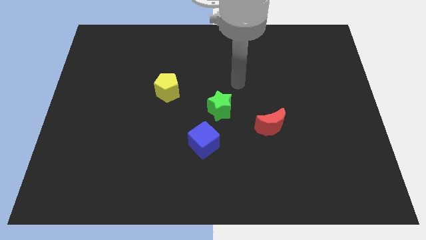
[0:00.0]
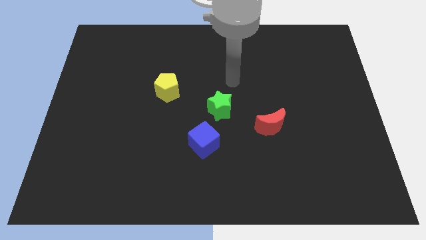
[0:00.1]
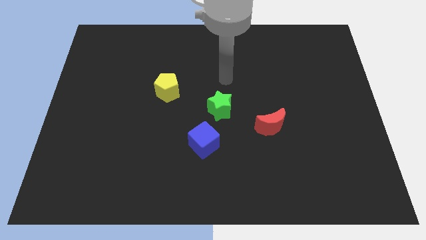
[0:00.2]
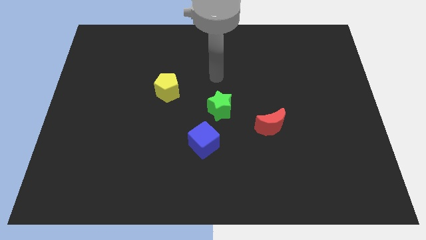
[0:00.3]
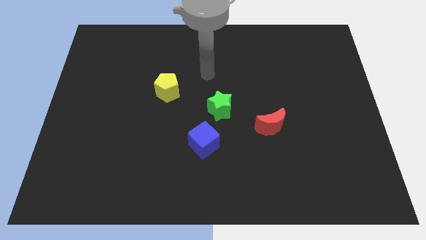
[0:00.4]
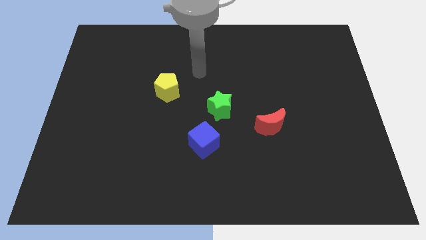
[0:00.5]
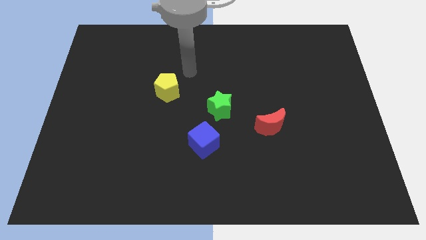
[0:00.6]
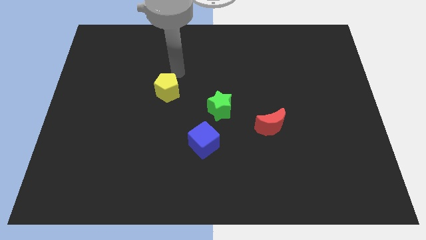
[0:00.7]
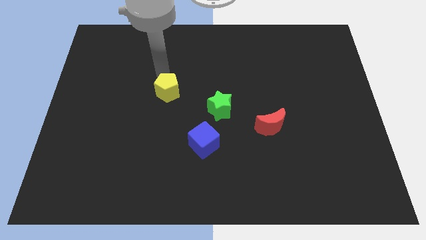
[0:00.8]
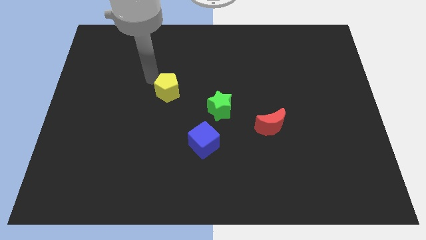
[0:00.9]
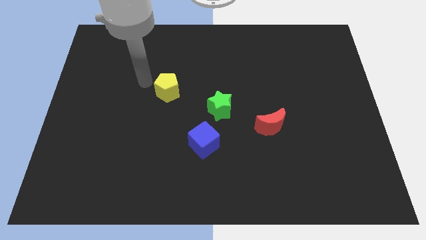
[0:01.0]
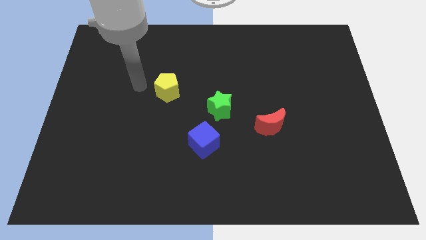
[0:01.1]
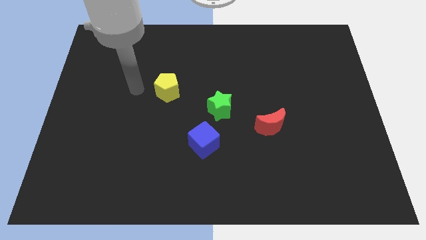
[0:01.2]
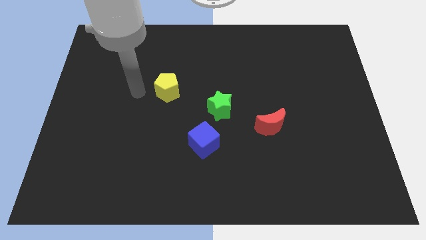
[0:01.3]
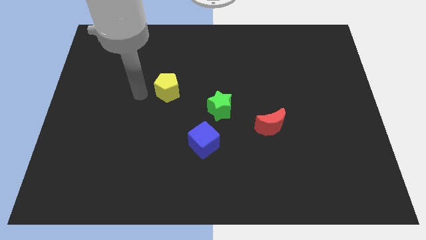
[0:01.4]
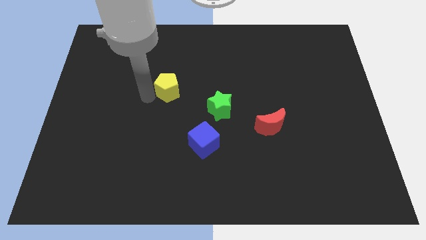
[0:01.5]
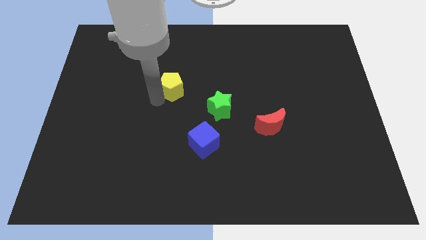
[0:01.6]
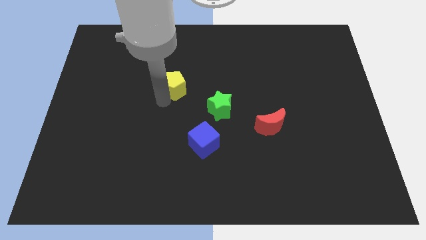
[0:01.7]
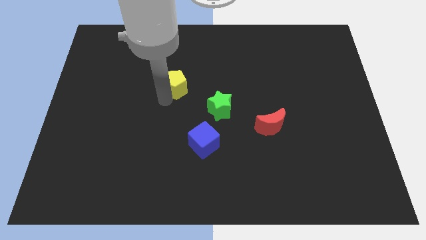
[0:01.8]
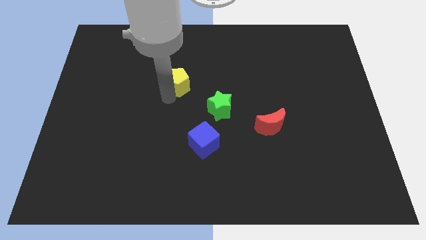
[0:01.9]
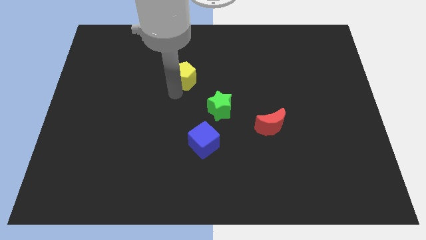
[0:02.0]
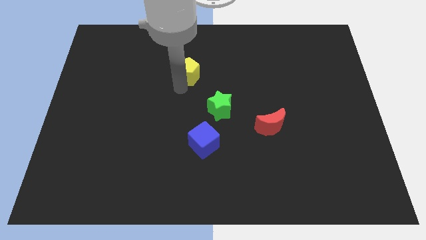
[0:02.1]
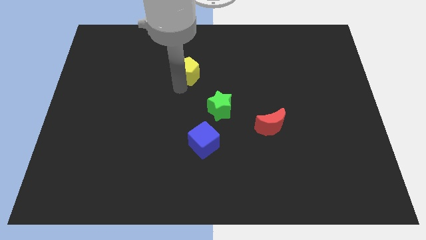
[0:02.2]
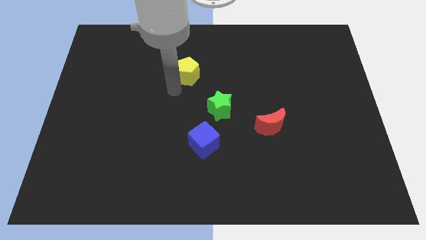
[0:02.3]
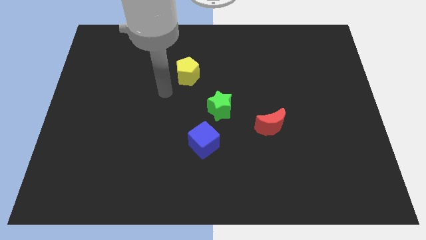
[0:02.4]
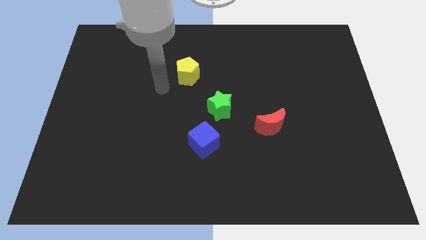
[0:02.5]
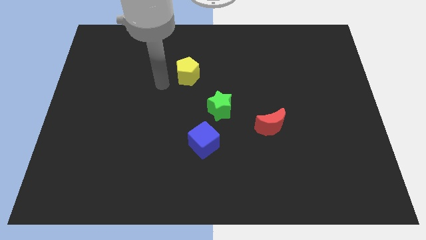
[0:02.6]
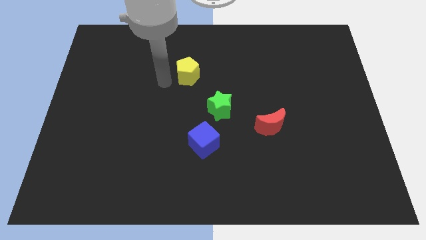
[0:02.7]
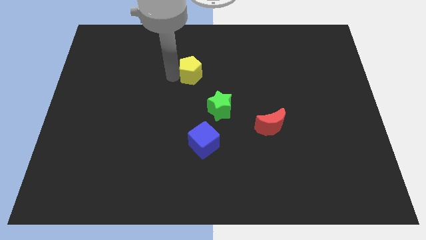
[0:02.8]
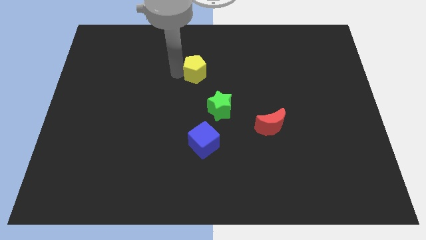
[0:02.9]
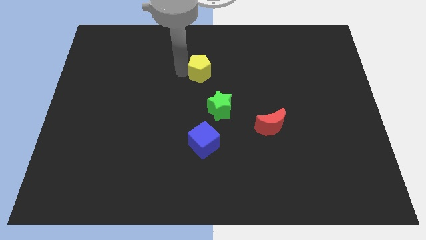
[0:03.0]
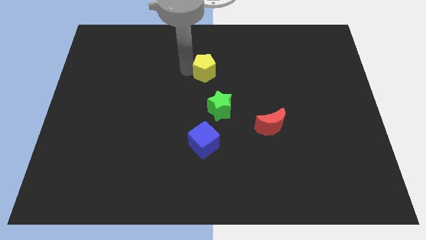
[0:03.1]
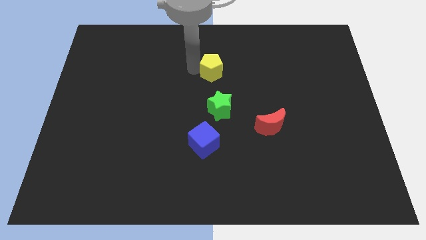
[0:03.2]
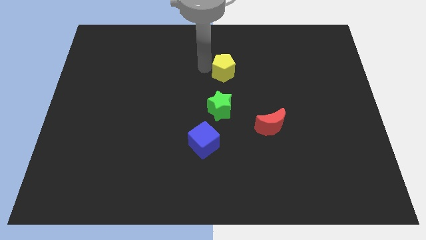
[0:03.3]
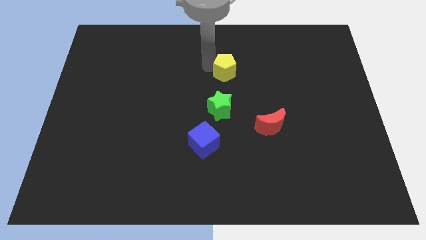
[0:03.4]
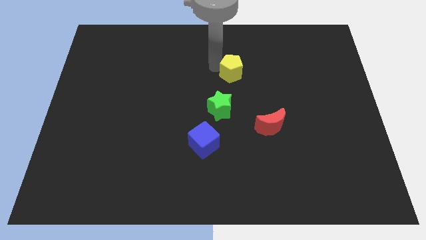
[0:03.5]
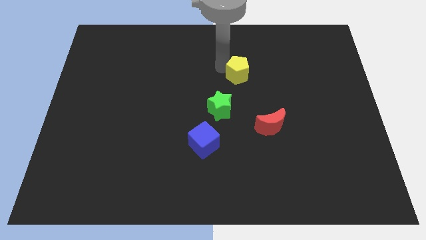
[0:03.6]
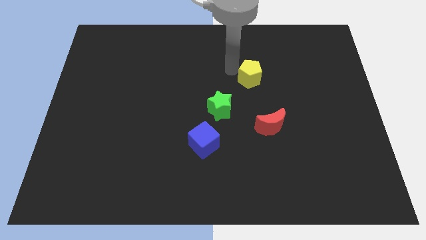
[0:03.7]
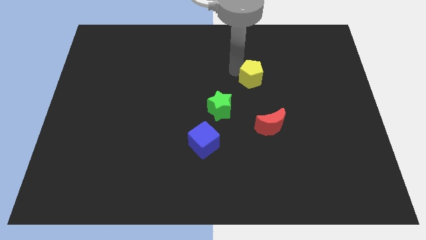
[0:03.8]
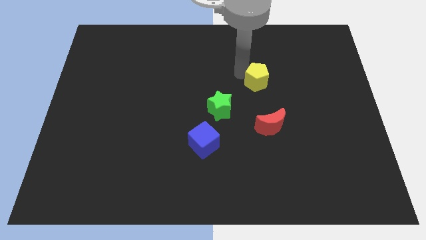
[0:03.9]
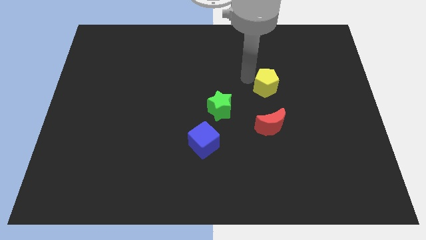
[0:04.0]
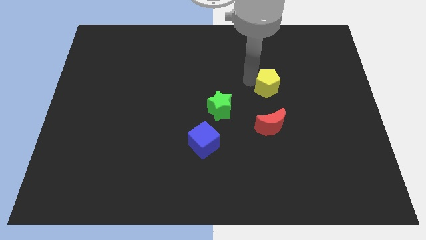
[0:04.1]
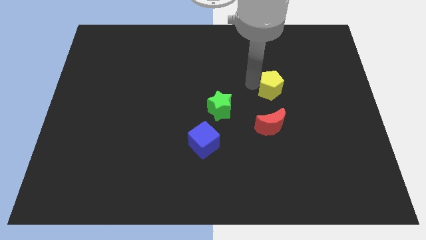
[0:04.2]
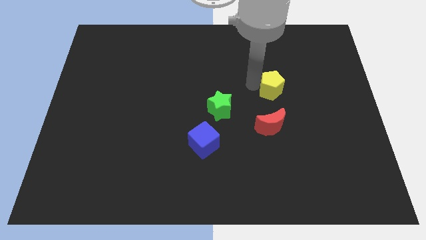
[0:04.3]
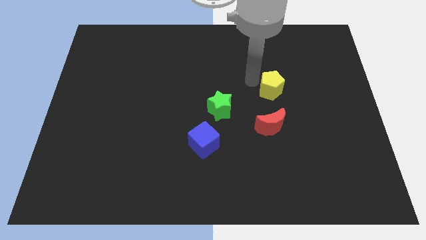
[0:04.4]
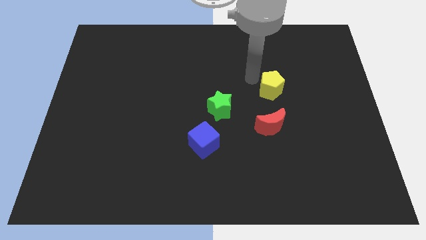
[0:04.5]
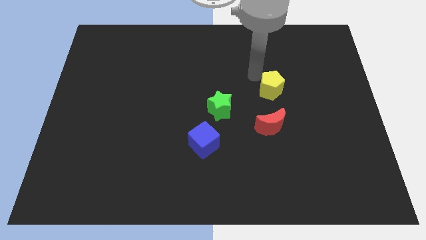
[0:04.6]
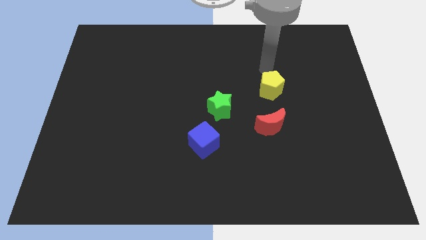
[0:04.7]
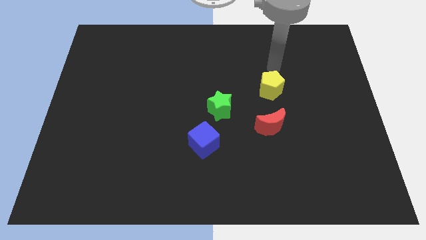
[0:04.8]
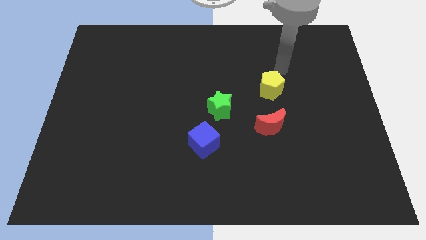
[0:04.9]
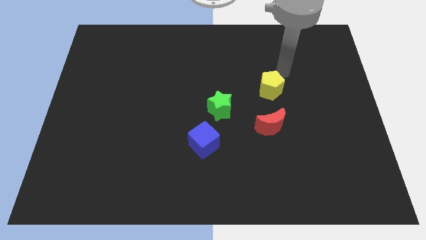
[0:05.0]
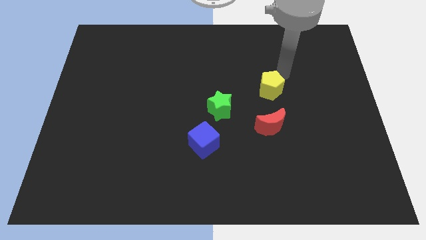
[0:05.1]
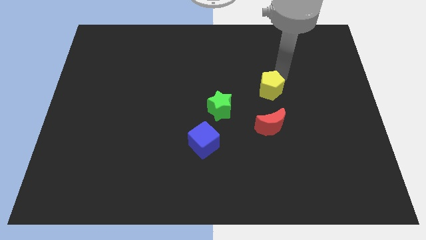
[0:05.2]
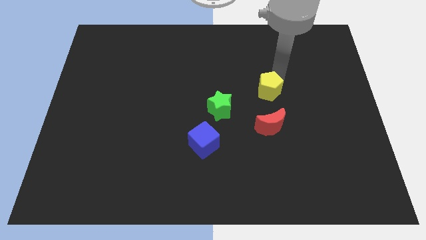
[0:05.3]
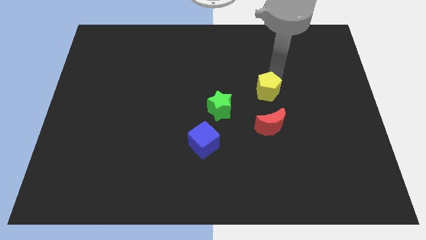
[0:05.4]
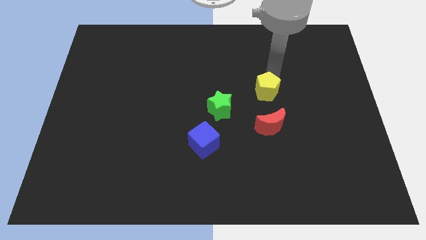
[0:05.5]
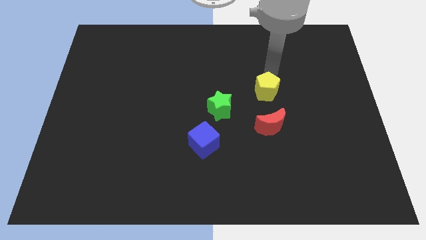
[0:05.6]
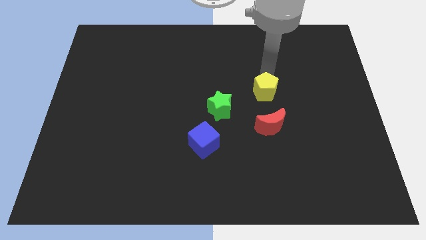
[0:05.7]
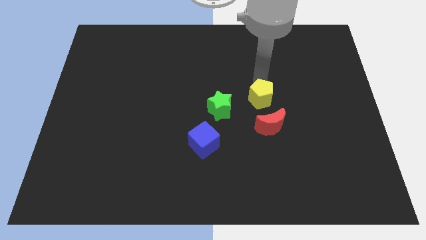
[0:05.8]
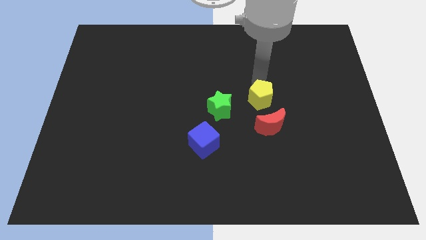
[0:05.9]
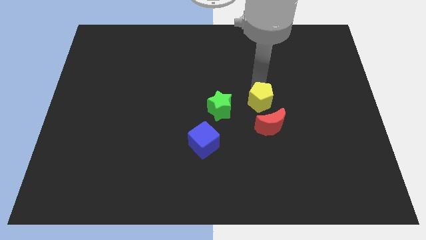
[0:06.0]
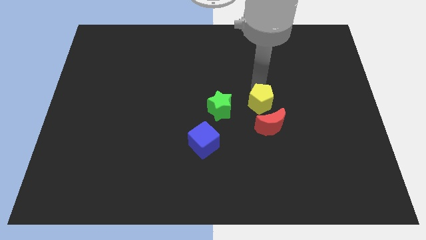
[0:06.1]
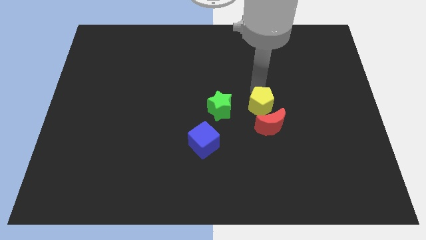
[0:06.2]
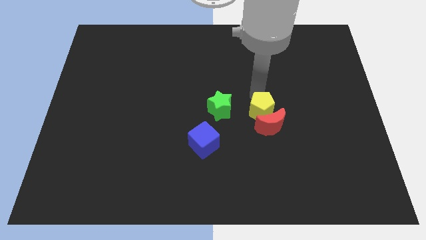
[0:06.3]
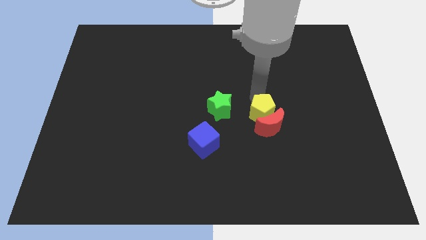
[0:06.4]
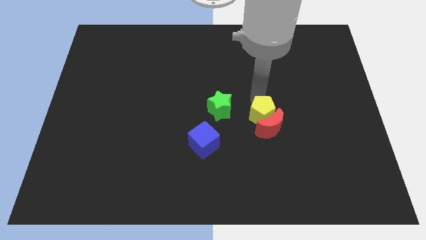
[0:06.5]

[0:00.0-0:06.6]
slide the yellow block to the red block

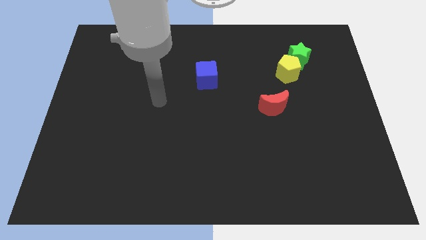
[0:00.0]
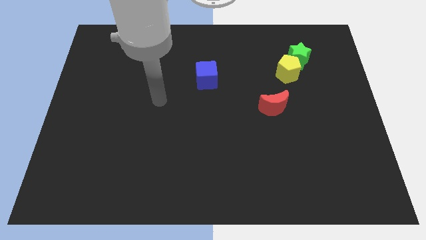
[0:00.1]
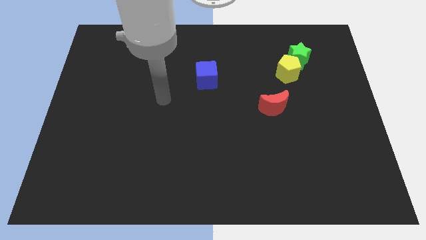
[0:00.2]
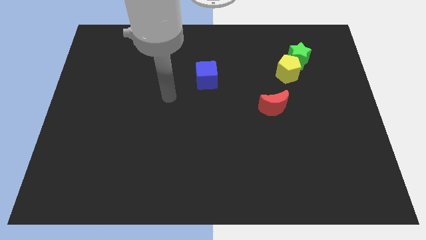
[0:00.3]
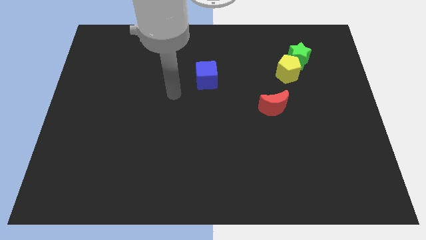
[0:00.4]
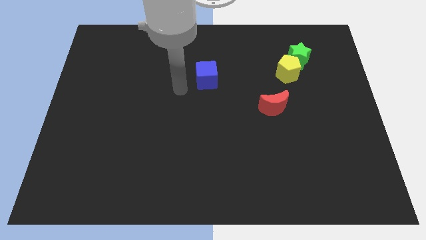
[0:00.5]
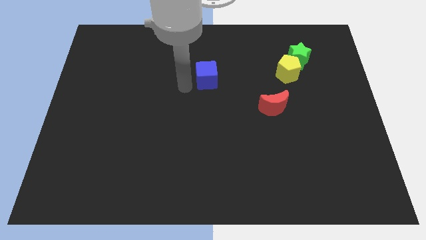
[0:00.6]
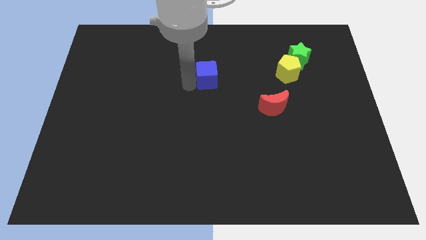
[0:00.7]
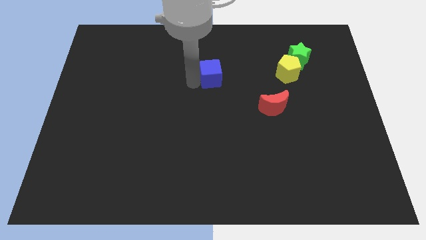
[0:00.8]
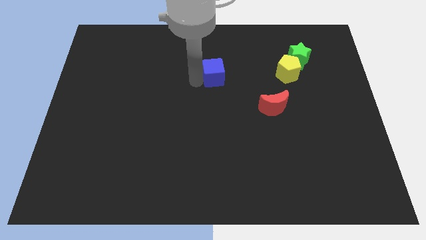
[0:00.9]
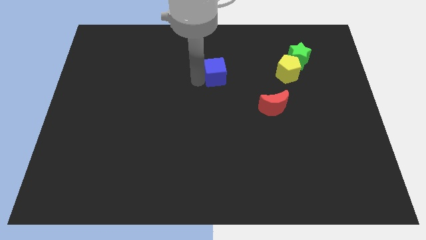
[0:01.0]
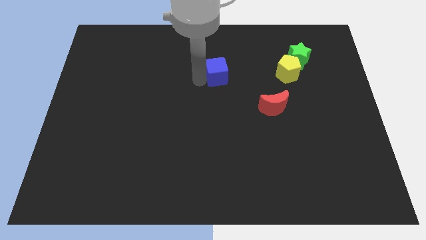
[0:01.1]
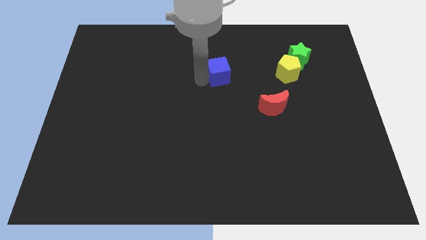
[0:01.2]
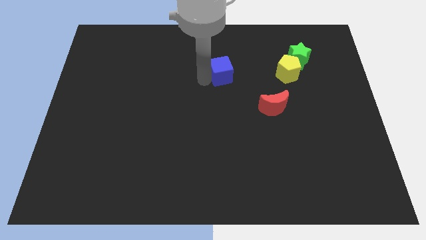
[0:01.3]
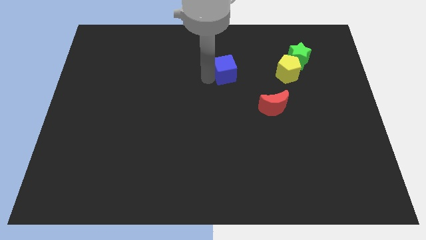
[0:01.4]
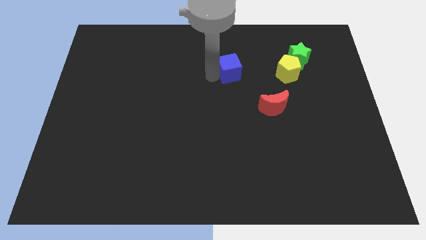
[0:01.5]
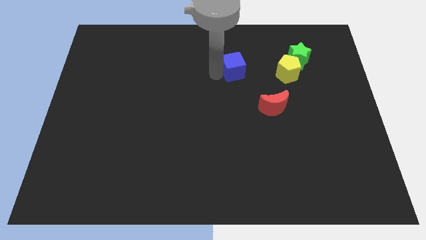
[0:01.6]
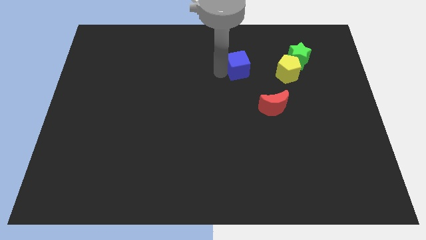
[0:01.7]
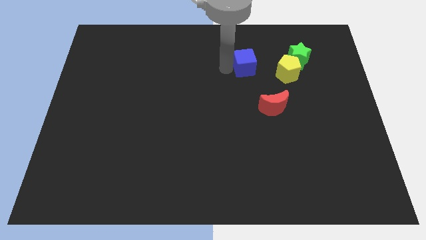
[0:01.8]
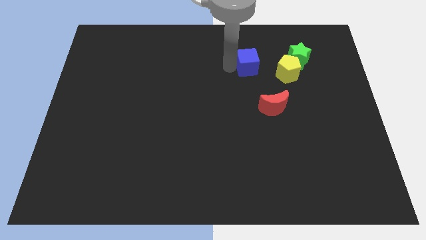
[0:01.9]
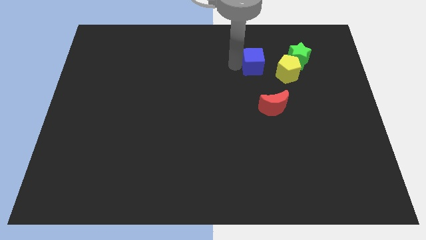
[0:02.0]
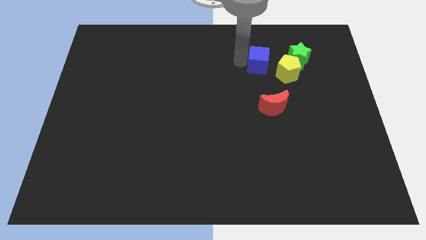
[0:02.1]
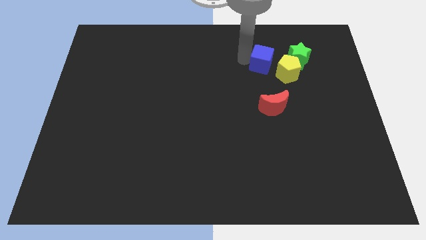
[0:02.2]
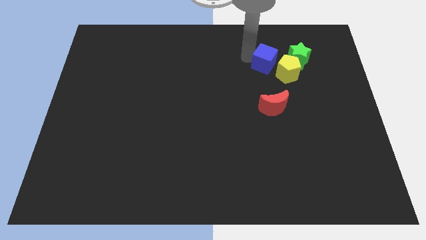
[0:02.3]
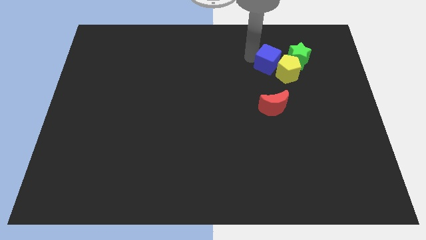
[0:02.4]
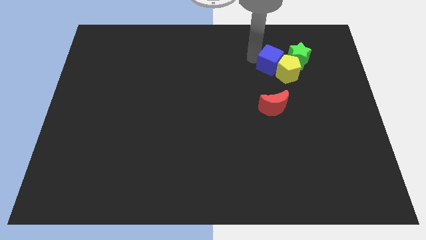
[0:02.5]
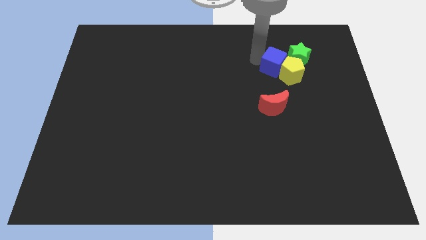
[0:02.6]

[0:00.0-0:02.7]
move the blue block towards the pentagon
